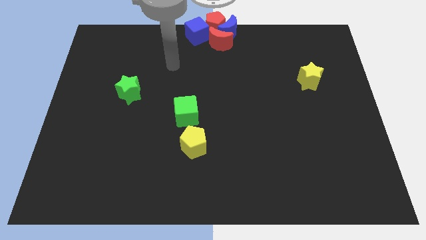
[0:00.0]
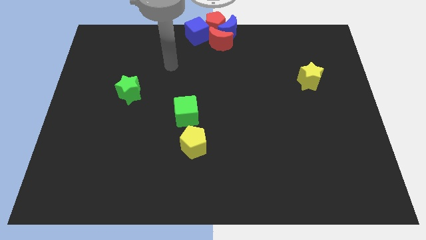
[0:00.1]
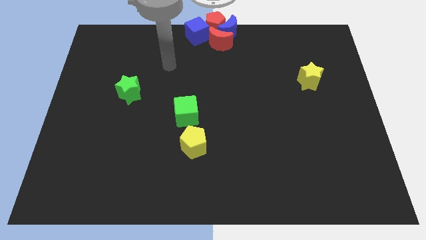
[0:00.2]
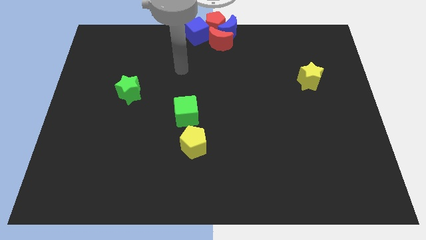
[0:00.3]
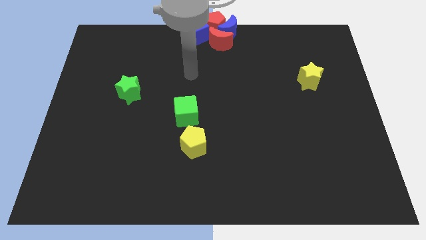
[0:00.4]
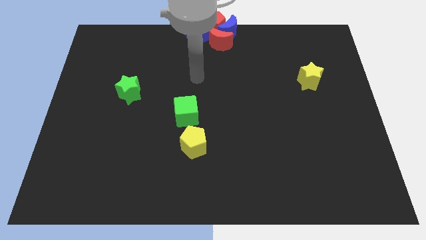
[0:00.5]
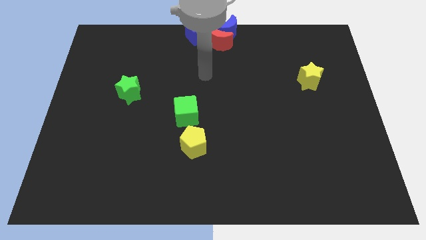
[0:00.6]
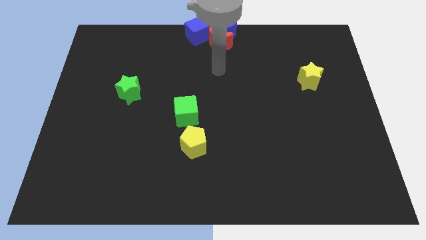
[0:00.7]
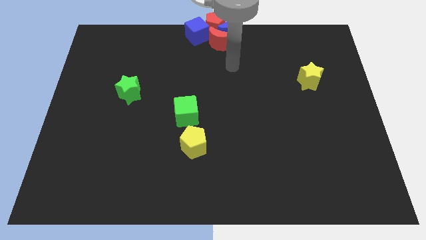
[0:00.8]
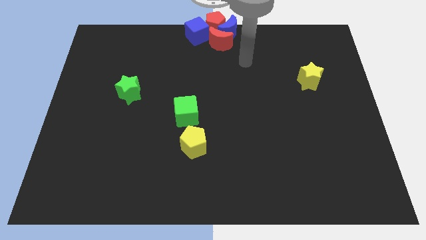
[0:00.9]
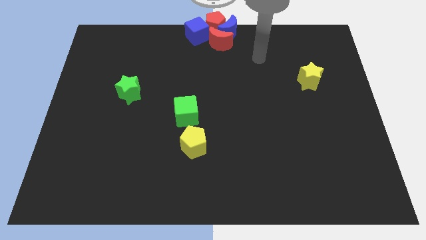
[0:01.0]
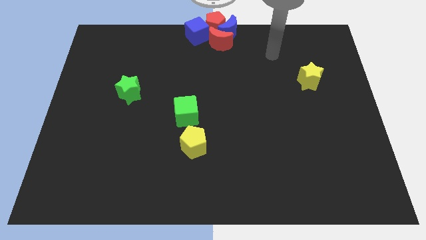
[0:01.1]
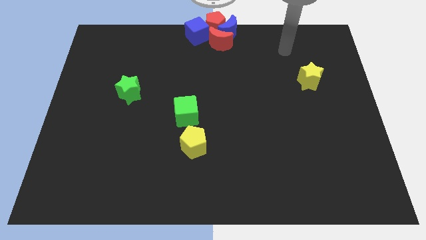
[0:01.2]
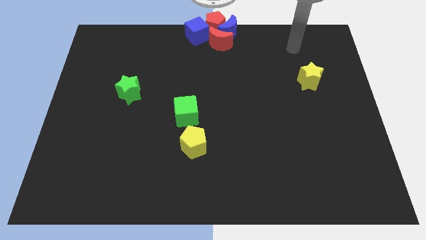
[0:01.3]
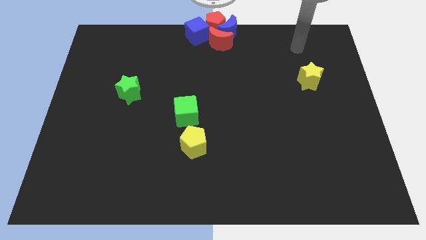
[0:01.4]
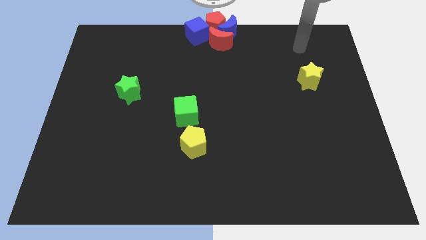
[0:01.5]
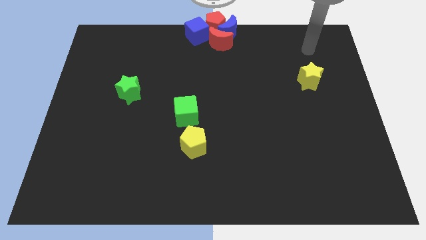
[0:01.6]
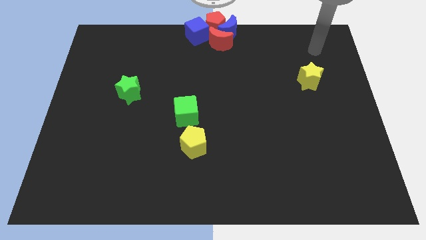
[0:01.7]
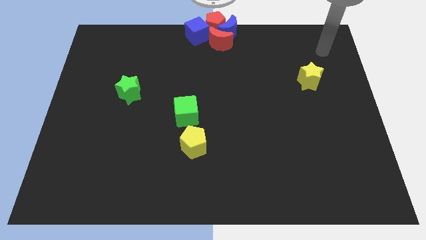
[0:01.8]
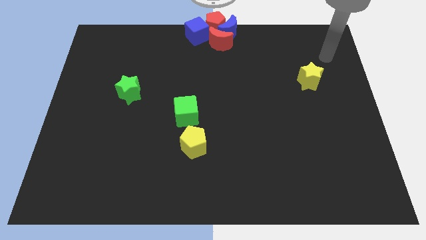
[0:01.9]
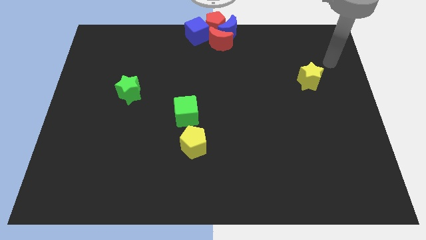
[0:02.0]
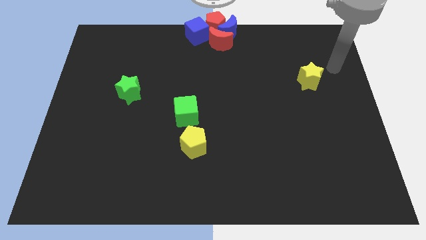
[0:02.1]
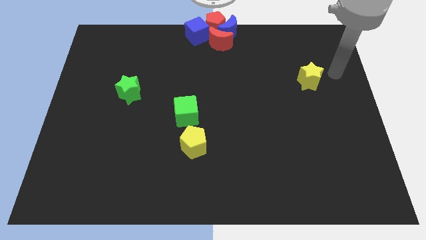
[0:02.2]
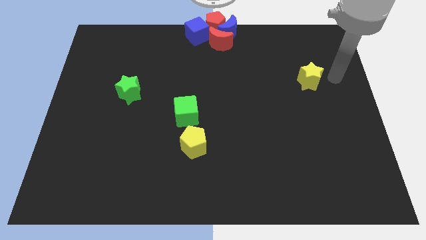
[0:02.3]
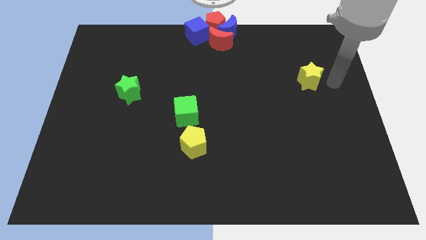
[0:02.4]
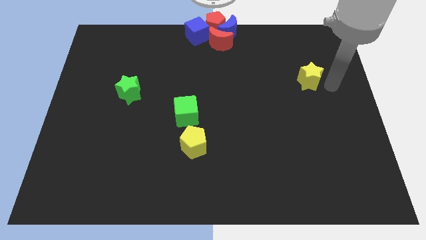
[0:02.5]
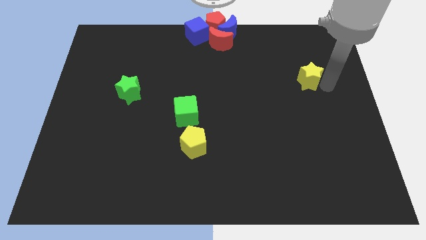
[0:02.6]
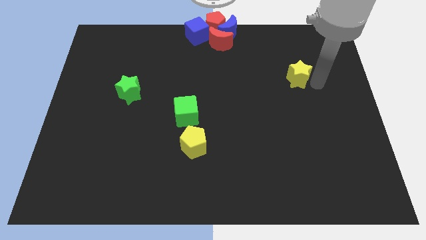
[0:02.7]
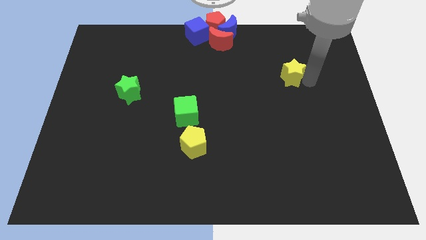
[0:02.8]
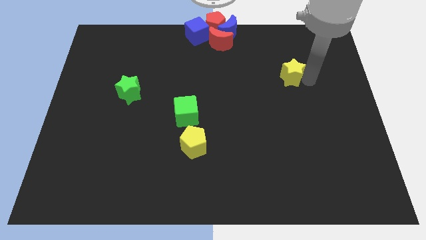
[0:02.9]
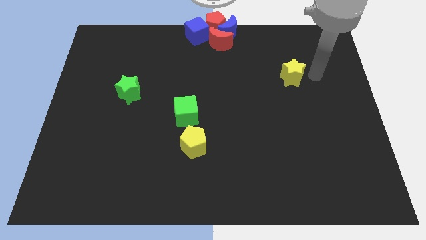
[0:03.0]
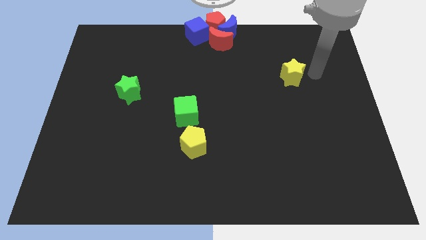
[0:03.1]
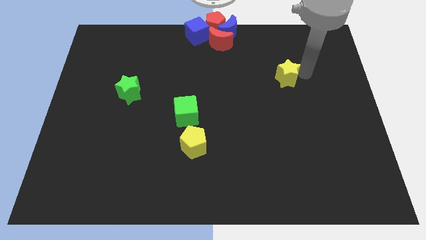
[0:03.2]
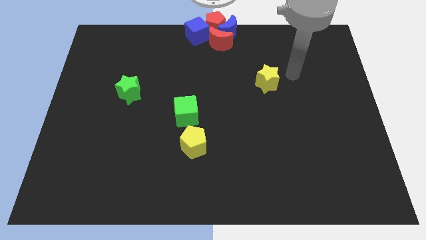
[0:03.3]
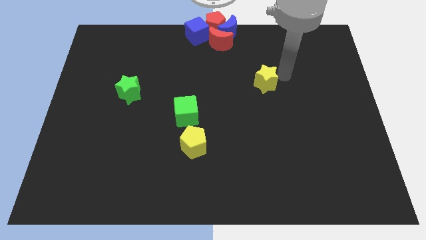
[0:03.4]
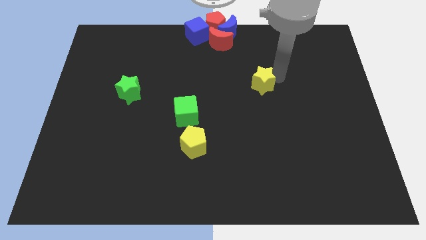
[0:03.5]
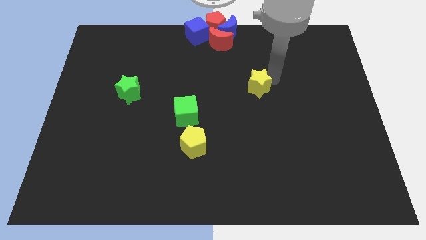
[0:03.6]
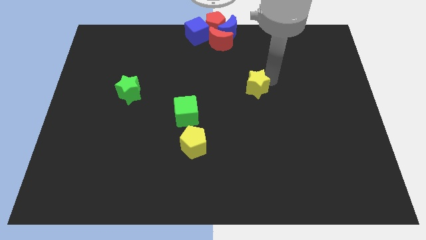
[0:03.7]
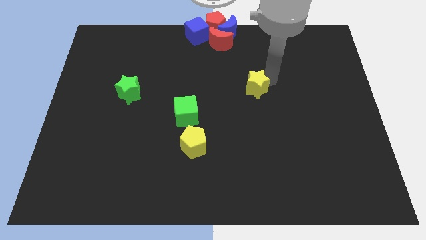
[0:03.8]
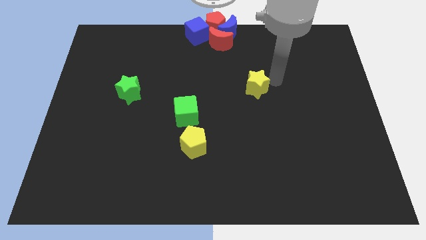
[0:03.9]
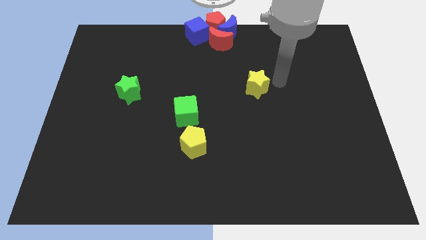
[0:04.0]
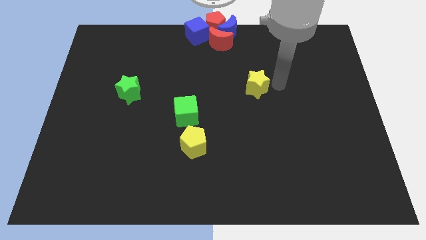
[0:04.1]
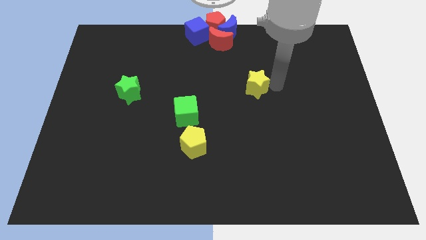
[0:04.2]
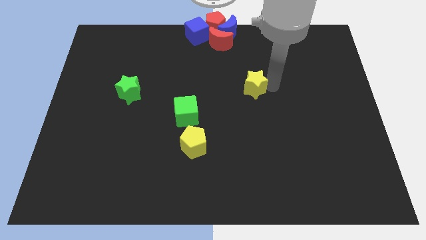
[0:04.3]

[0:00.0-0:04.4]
push the yellow star to the left side of the board

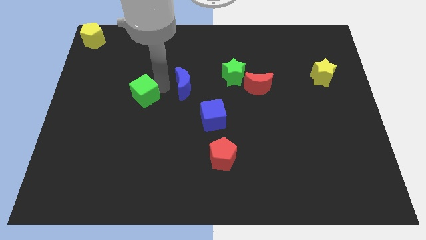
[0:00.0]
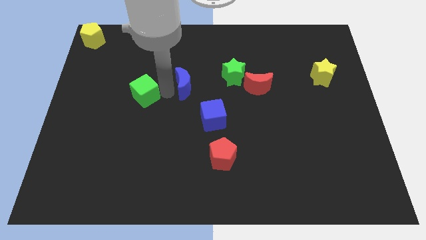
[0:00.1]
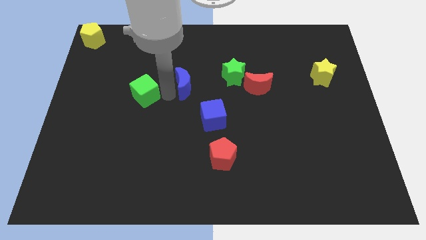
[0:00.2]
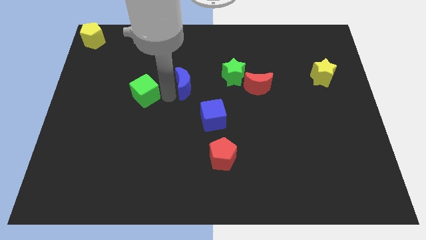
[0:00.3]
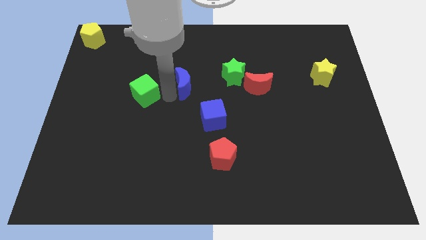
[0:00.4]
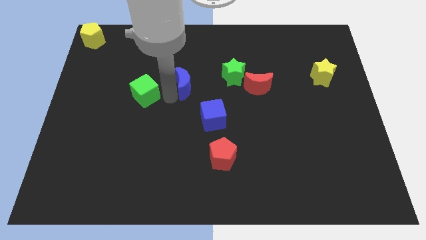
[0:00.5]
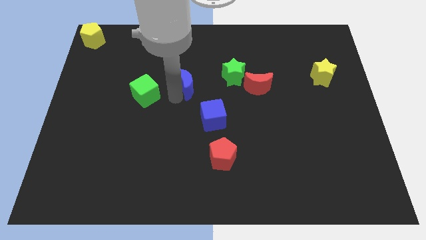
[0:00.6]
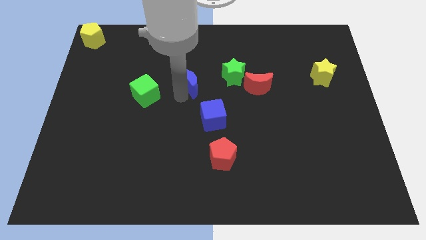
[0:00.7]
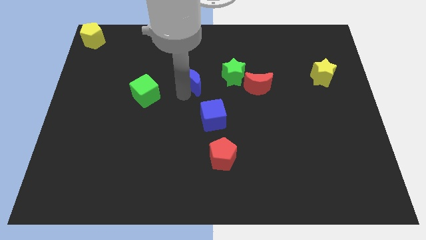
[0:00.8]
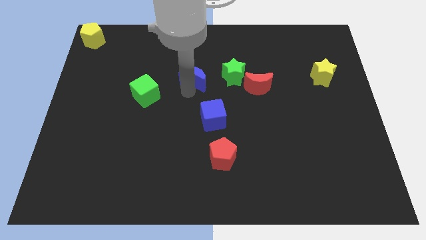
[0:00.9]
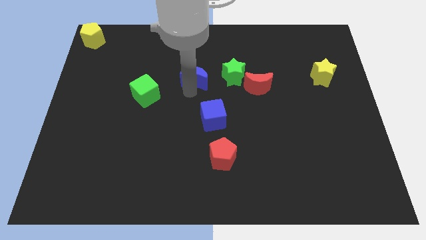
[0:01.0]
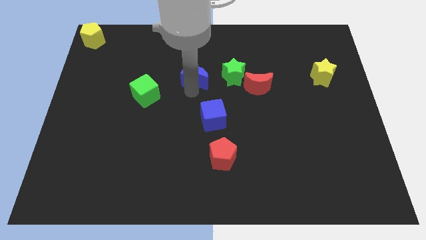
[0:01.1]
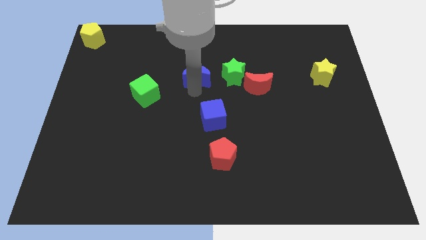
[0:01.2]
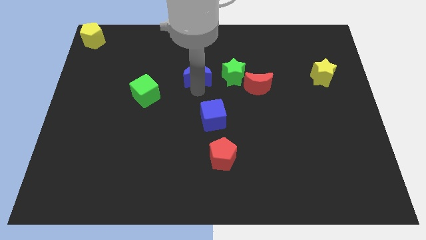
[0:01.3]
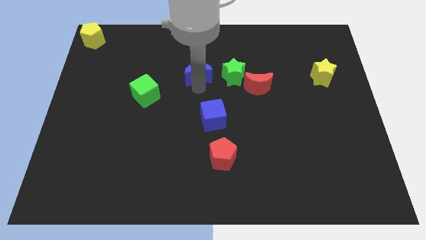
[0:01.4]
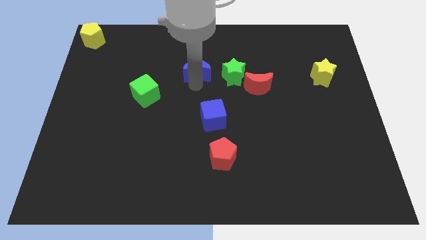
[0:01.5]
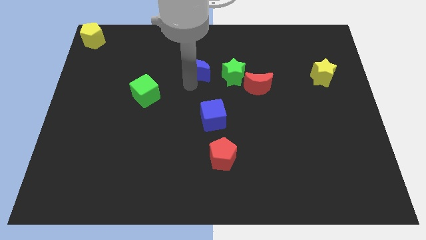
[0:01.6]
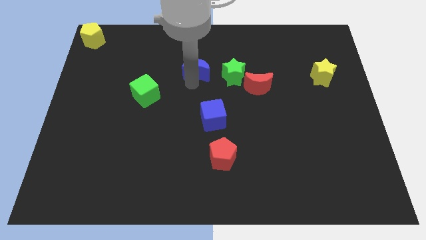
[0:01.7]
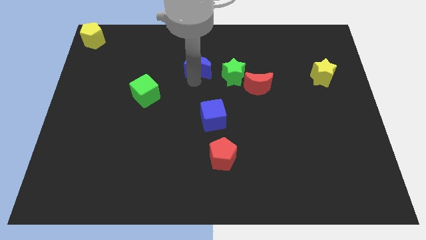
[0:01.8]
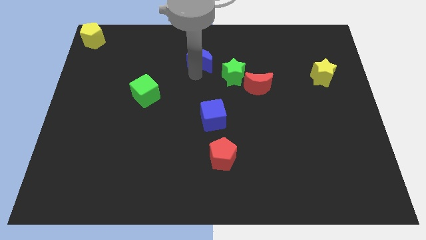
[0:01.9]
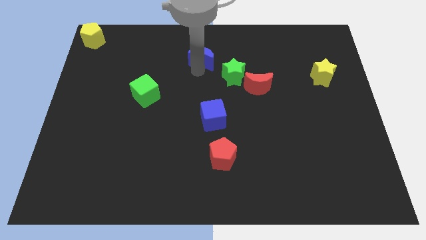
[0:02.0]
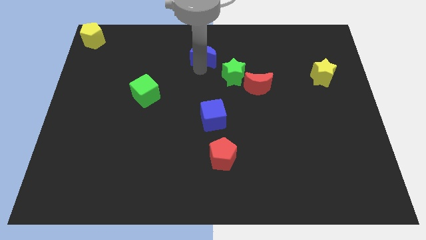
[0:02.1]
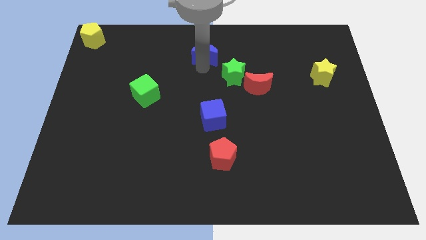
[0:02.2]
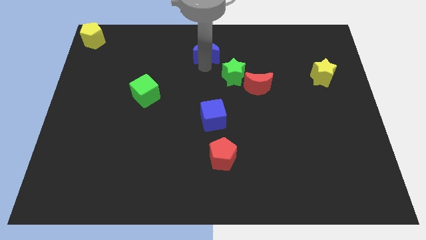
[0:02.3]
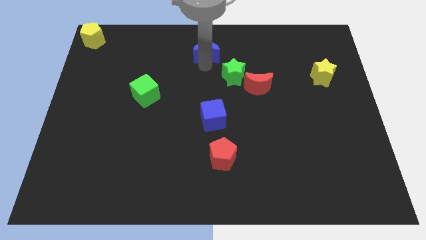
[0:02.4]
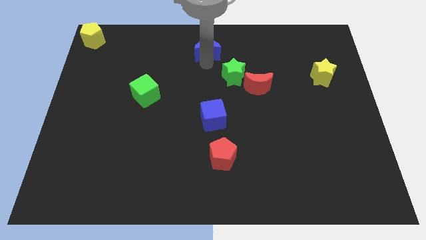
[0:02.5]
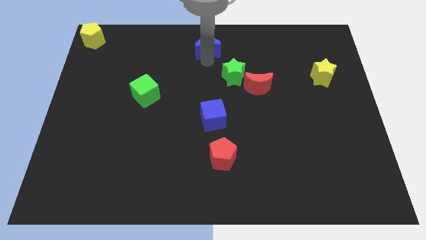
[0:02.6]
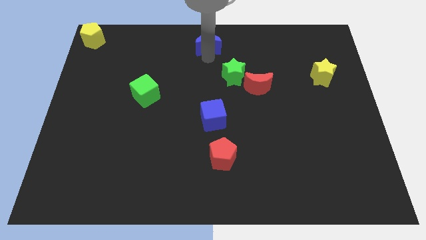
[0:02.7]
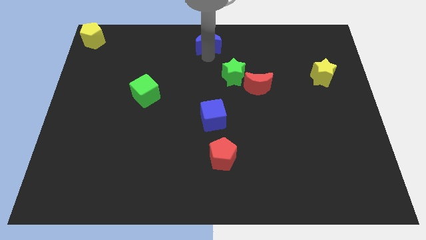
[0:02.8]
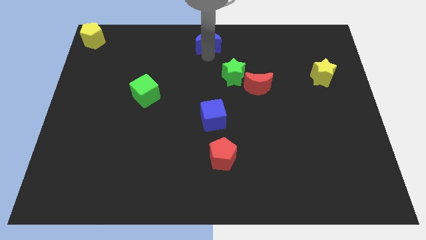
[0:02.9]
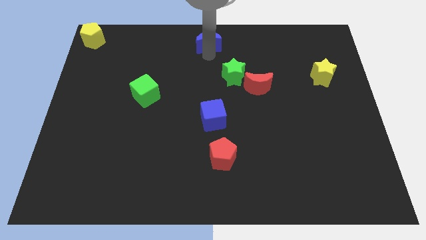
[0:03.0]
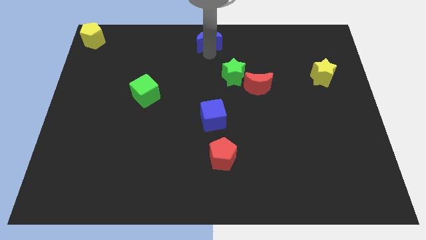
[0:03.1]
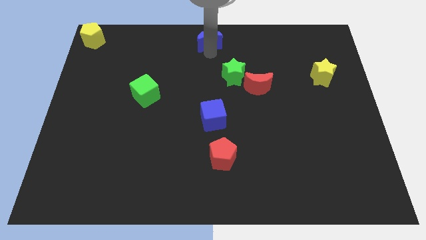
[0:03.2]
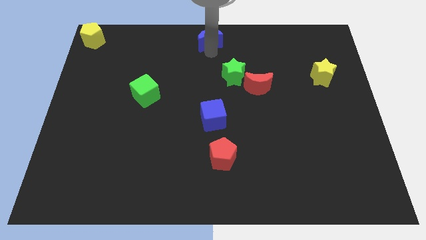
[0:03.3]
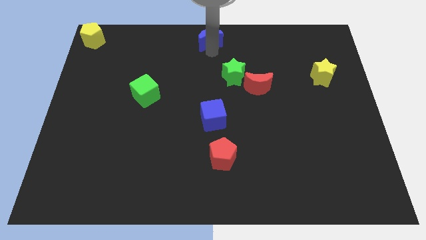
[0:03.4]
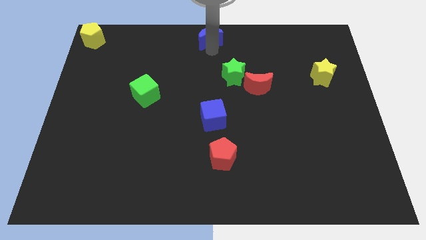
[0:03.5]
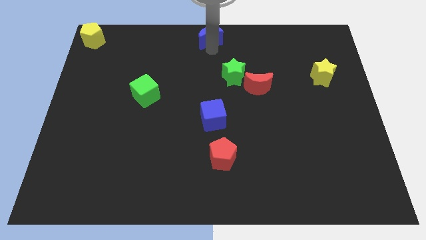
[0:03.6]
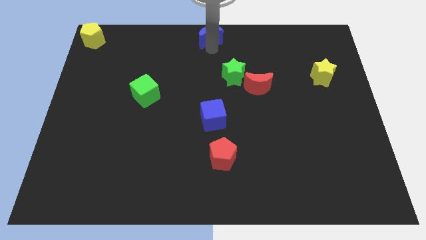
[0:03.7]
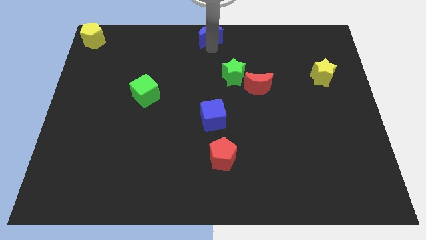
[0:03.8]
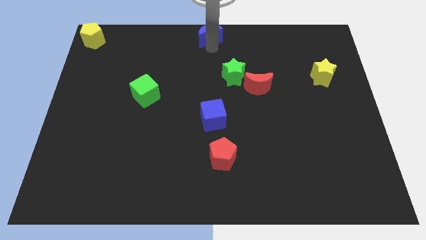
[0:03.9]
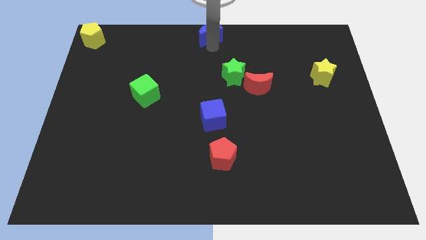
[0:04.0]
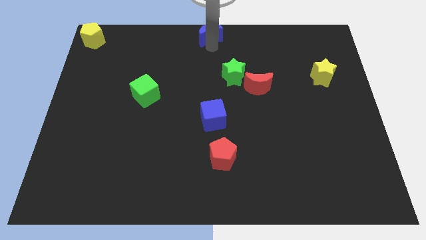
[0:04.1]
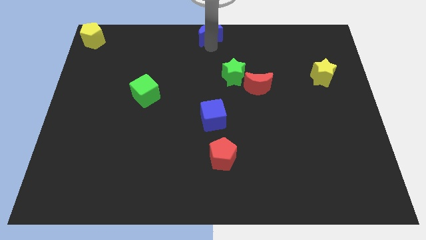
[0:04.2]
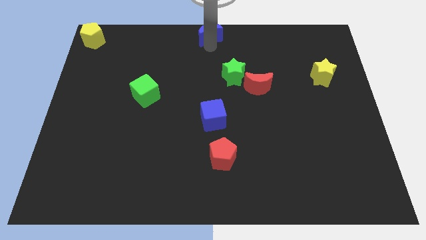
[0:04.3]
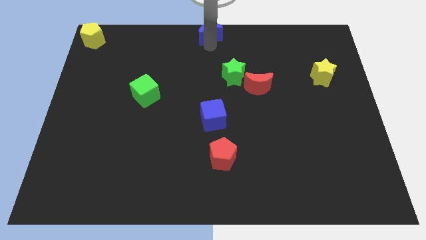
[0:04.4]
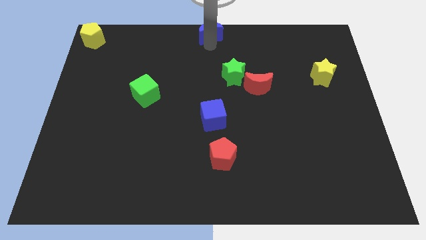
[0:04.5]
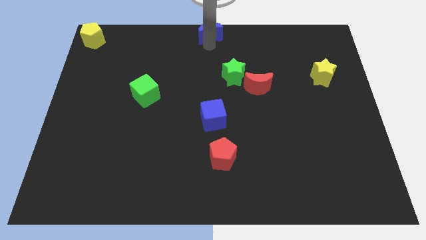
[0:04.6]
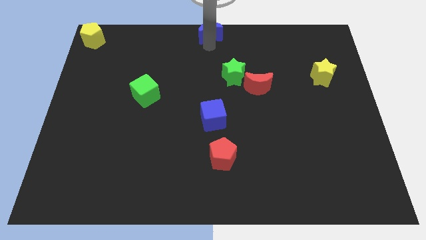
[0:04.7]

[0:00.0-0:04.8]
move the blue crescent to the top center of the board
